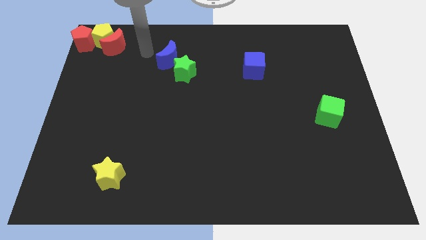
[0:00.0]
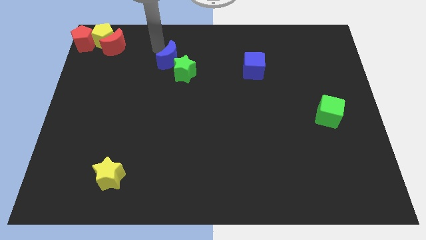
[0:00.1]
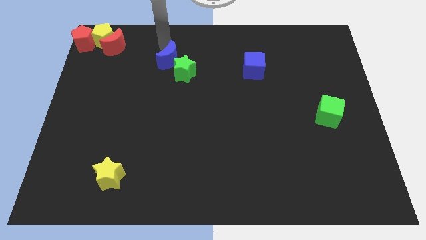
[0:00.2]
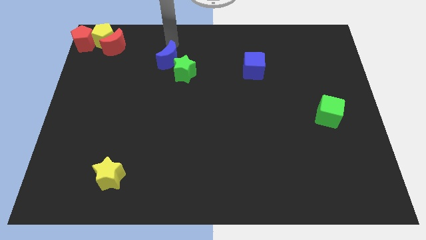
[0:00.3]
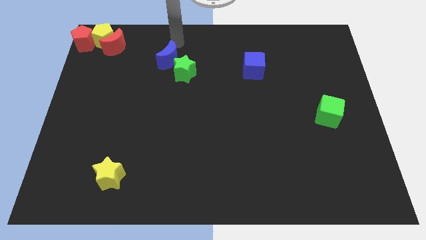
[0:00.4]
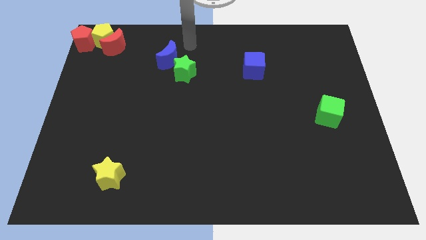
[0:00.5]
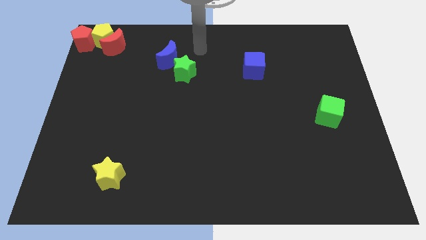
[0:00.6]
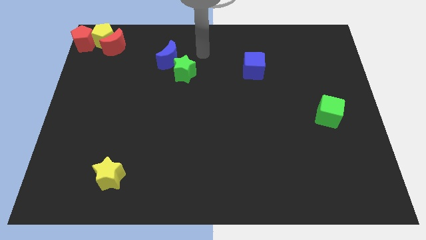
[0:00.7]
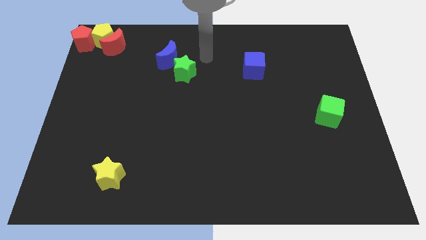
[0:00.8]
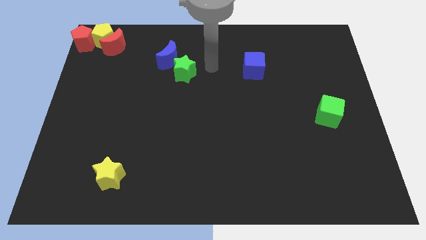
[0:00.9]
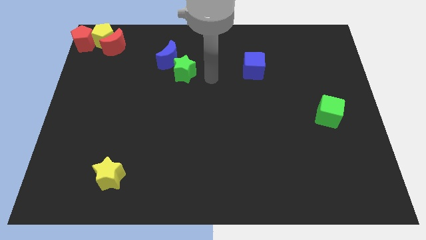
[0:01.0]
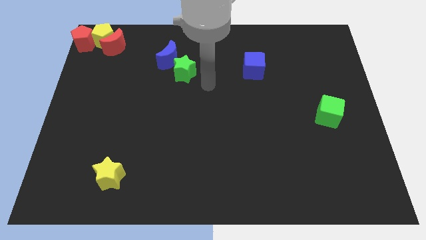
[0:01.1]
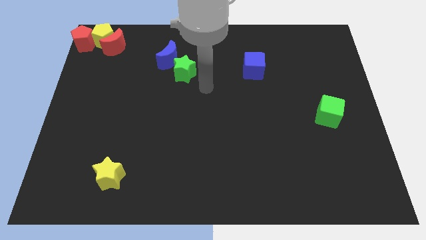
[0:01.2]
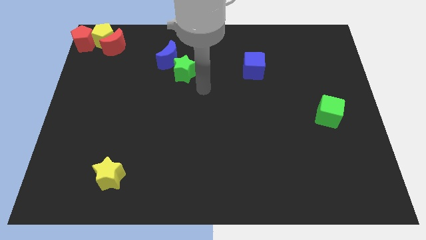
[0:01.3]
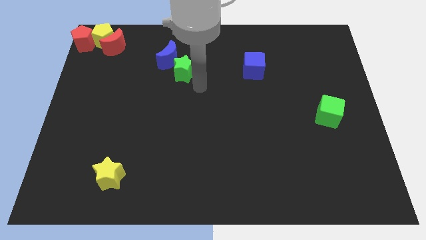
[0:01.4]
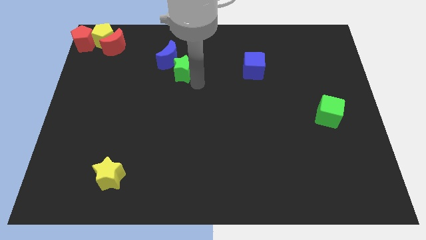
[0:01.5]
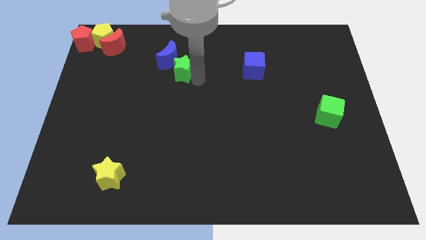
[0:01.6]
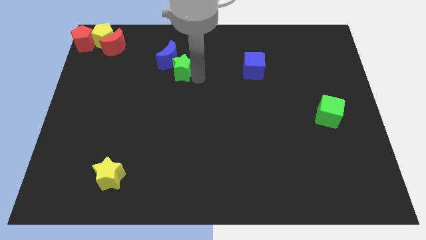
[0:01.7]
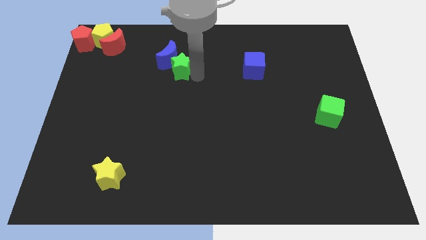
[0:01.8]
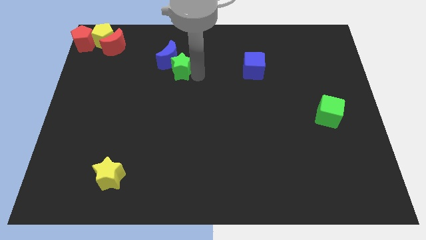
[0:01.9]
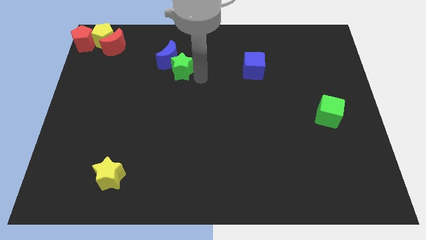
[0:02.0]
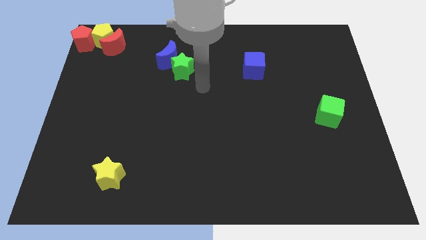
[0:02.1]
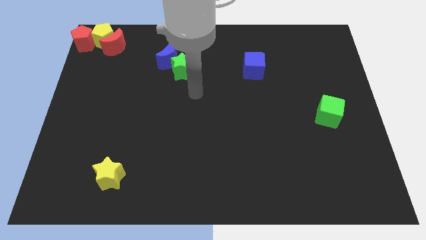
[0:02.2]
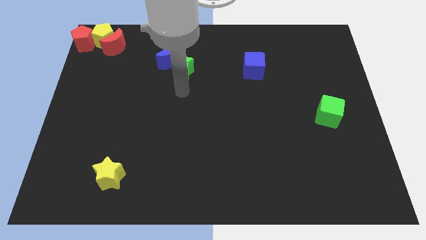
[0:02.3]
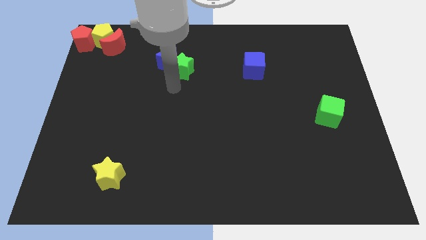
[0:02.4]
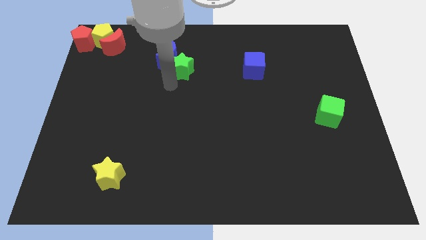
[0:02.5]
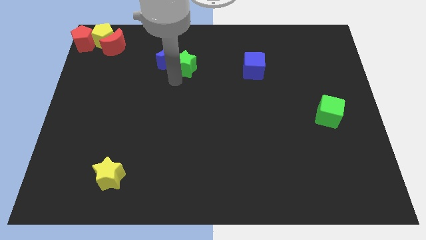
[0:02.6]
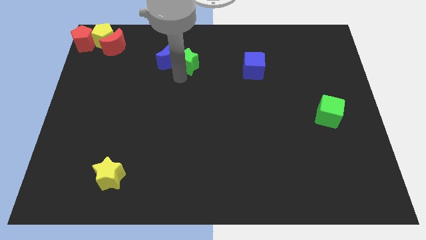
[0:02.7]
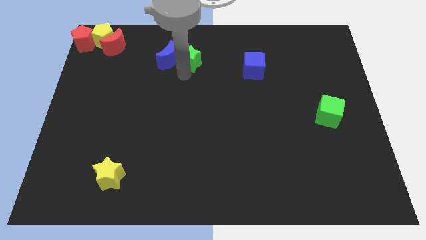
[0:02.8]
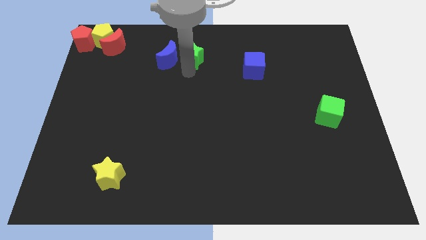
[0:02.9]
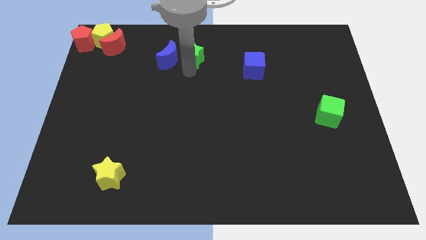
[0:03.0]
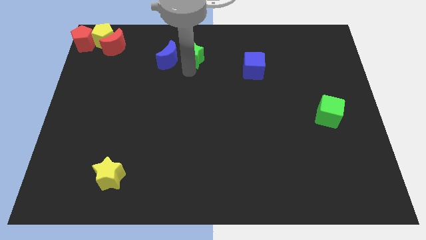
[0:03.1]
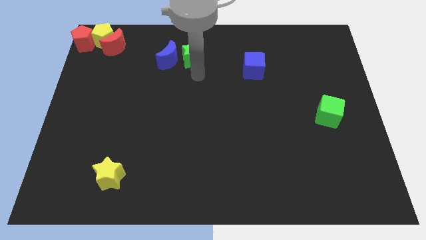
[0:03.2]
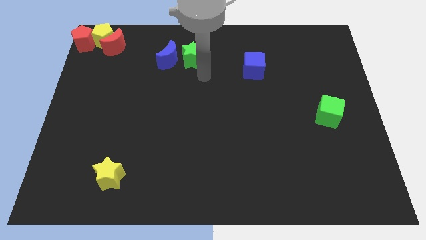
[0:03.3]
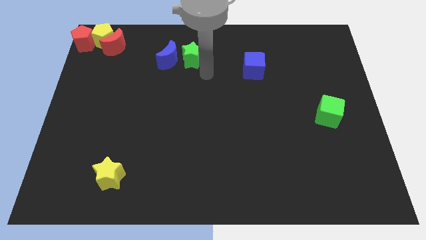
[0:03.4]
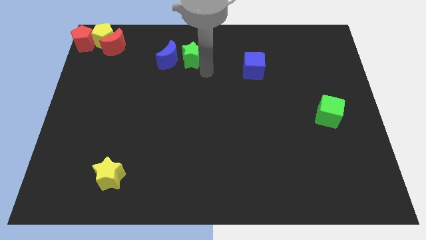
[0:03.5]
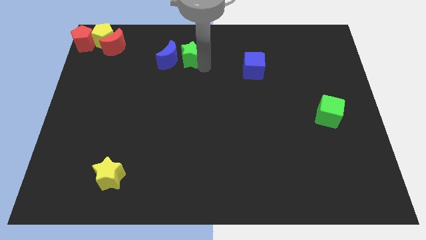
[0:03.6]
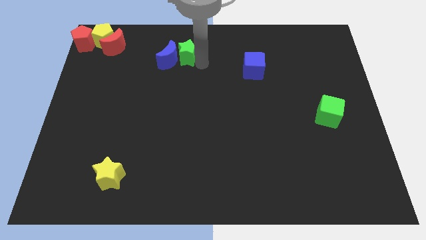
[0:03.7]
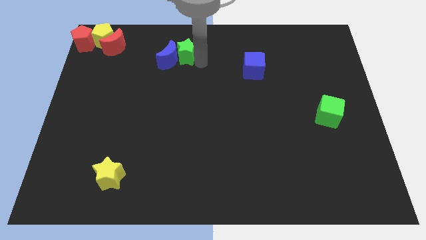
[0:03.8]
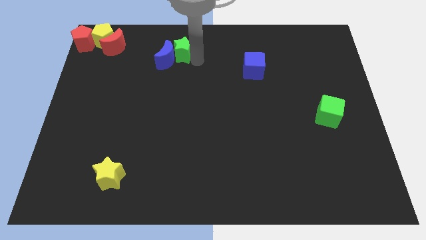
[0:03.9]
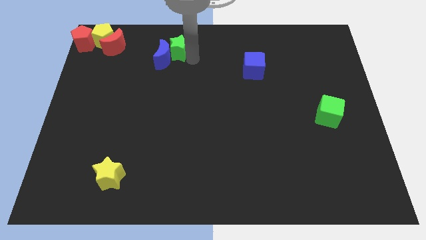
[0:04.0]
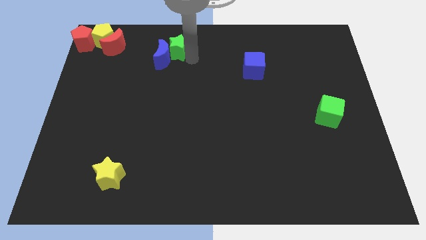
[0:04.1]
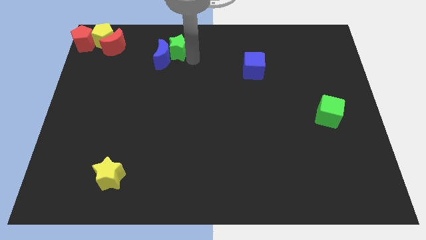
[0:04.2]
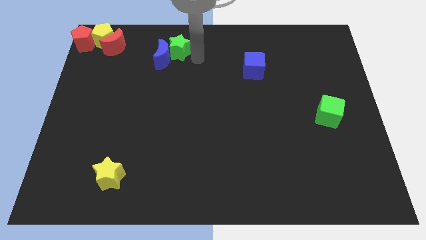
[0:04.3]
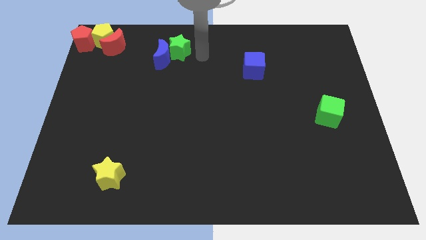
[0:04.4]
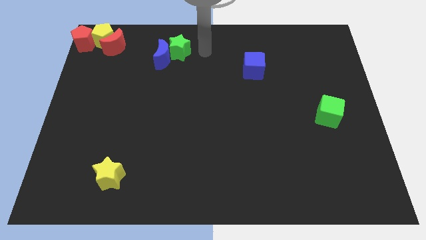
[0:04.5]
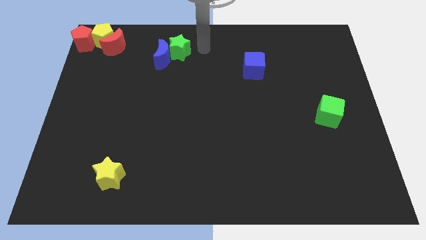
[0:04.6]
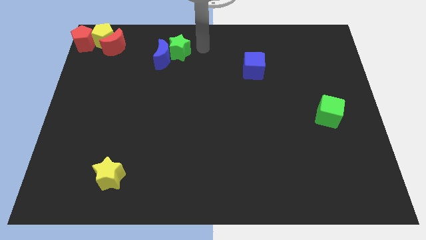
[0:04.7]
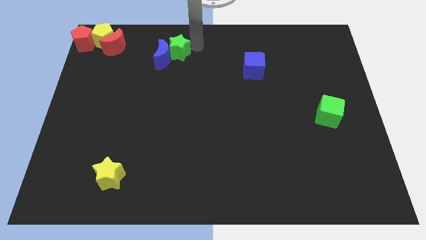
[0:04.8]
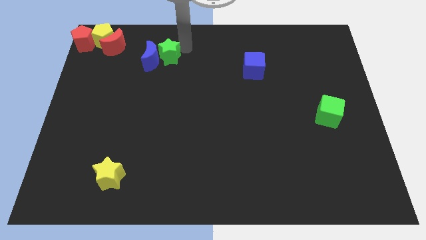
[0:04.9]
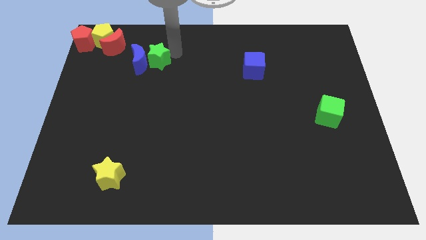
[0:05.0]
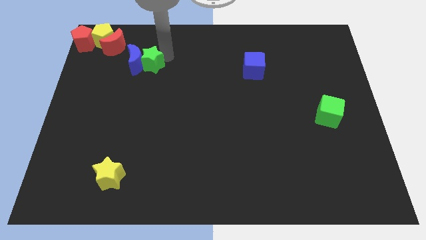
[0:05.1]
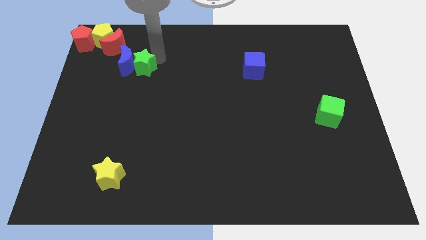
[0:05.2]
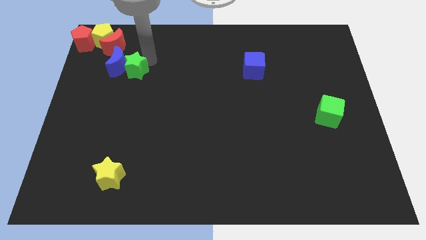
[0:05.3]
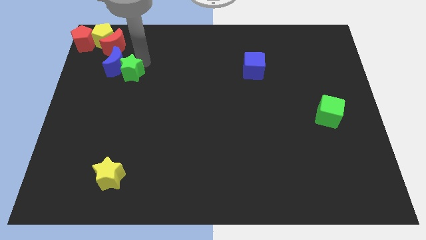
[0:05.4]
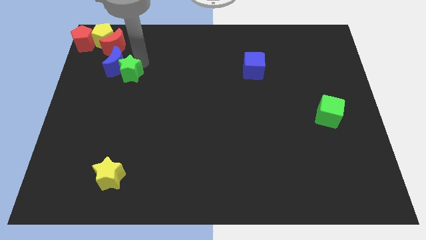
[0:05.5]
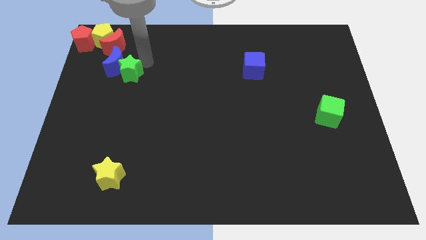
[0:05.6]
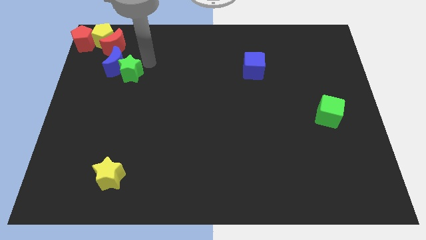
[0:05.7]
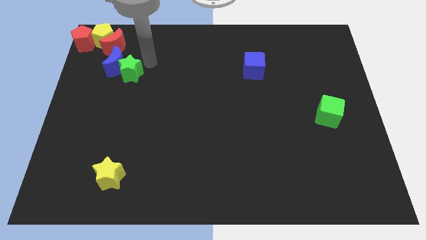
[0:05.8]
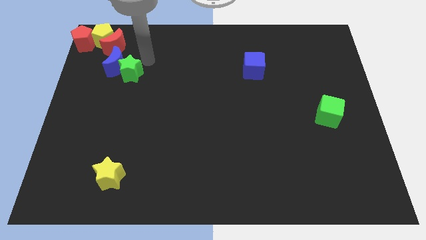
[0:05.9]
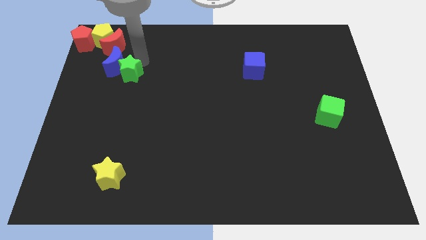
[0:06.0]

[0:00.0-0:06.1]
push the blue moon with the green star slightly to the left

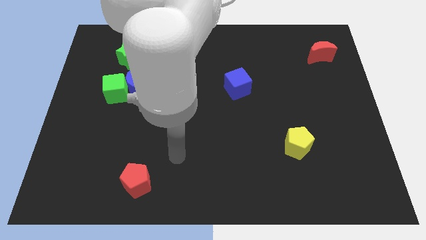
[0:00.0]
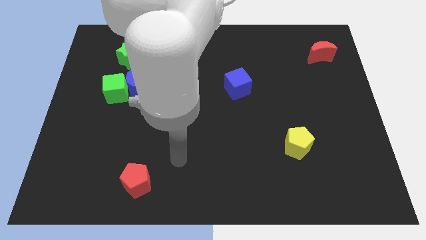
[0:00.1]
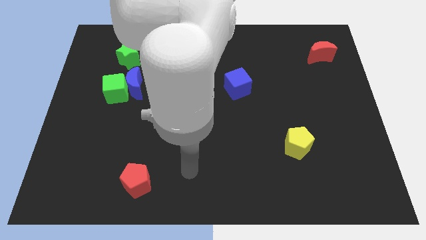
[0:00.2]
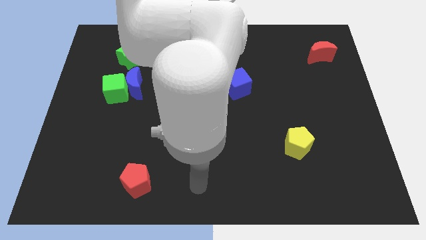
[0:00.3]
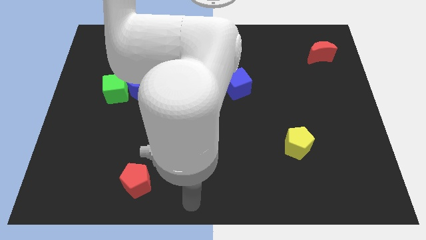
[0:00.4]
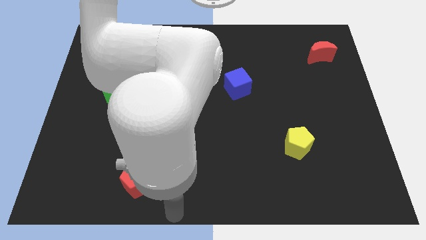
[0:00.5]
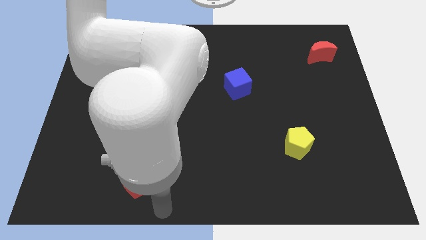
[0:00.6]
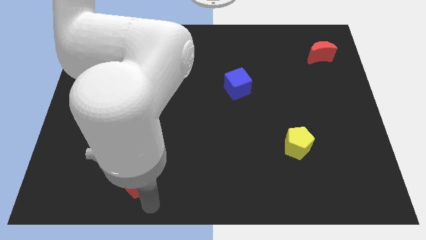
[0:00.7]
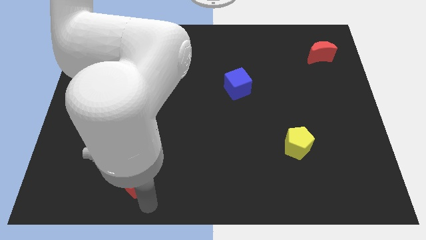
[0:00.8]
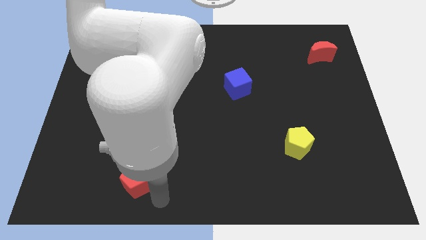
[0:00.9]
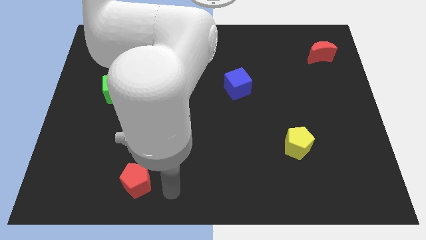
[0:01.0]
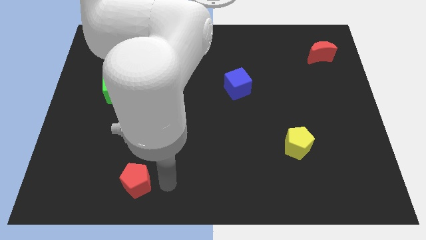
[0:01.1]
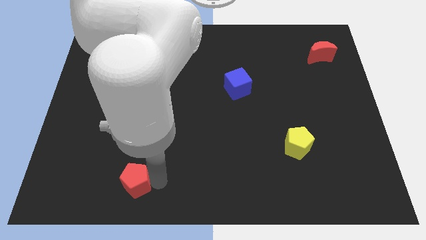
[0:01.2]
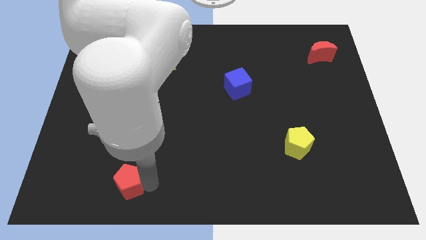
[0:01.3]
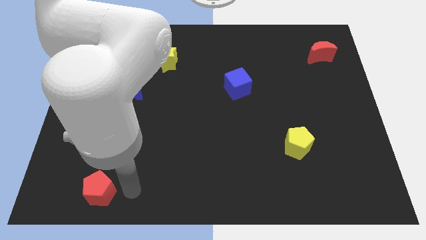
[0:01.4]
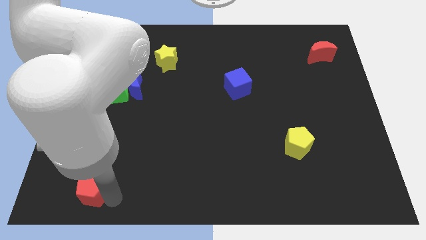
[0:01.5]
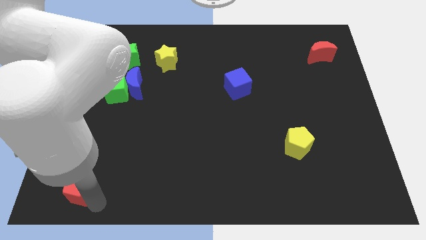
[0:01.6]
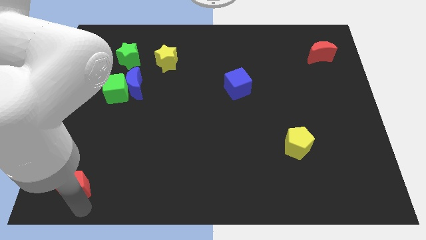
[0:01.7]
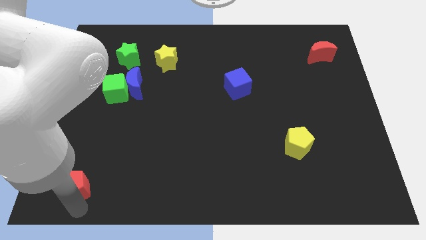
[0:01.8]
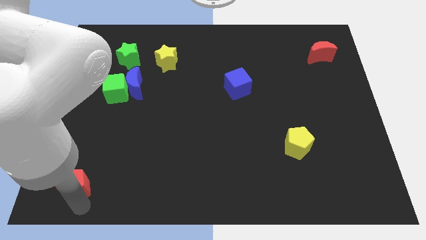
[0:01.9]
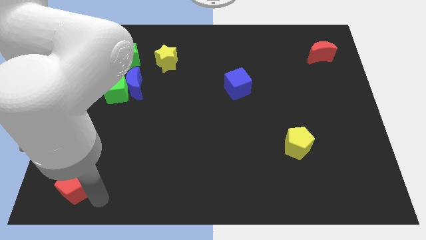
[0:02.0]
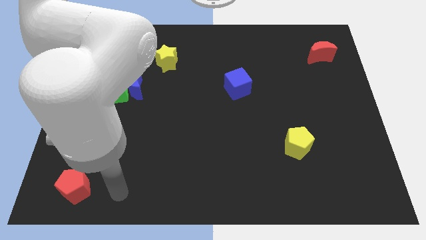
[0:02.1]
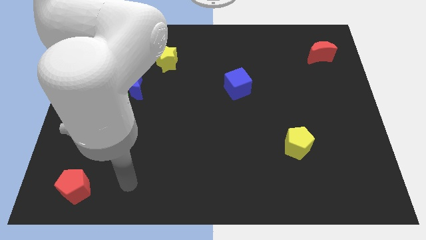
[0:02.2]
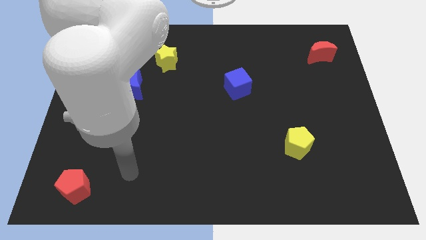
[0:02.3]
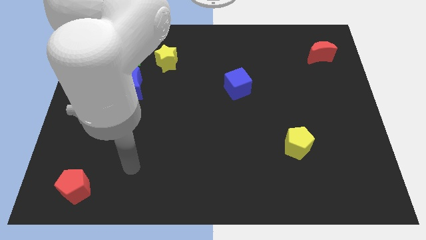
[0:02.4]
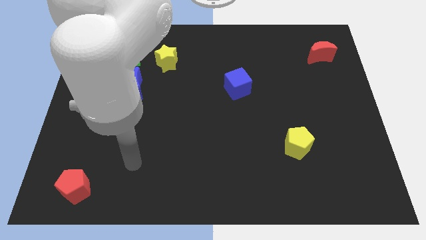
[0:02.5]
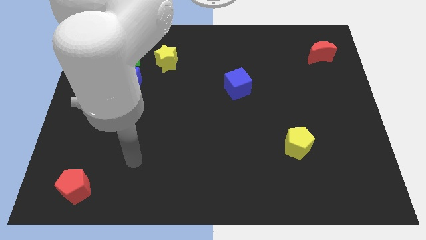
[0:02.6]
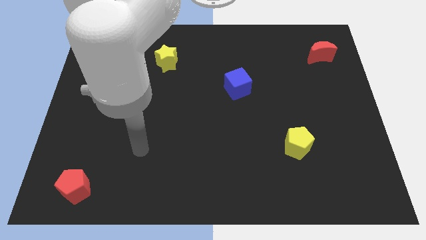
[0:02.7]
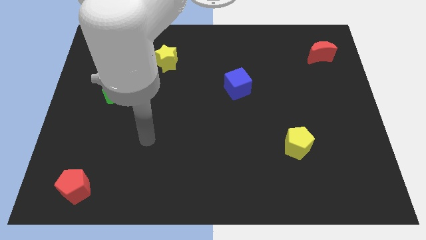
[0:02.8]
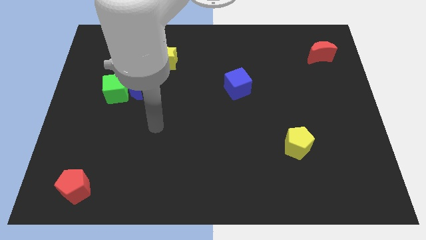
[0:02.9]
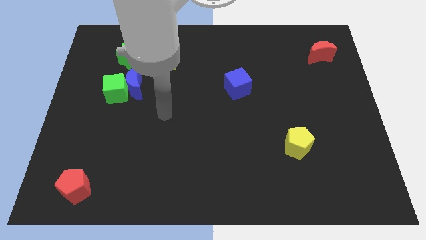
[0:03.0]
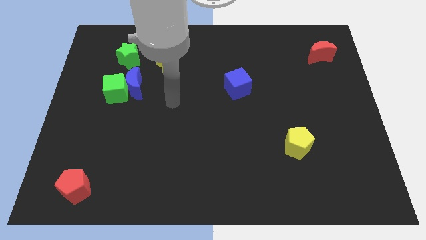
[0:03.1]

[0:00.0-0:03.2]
push the red pentagon towards the bottom left corner of the board
